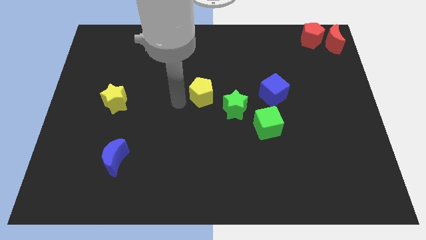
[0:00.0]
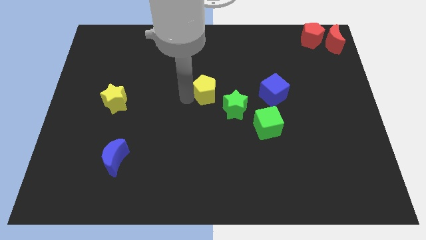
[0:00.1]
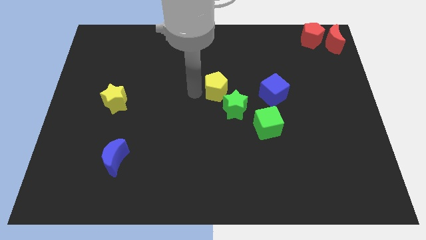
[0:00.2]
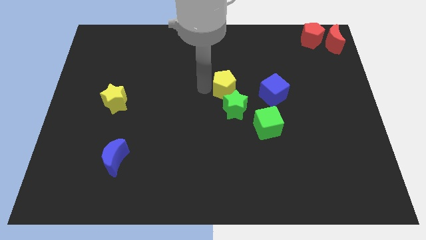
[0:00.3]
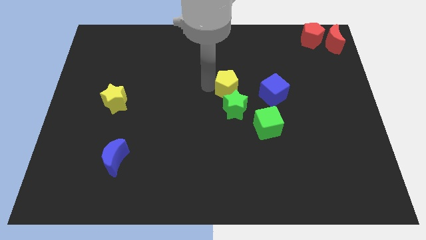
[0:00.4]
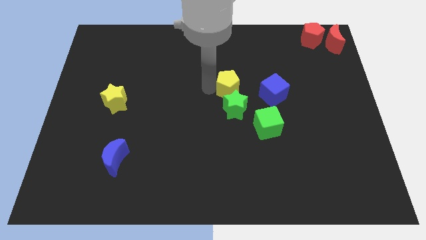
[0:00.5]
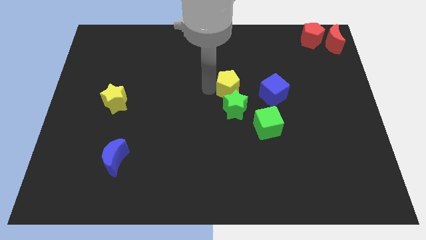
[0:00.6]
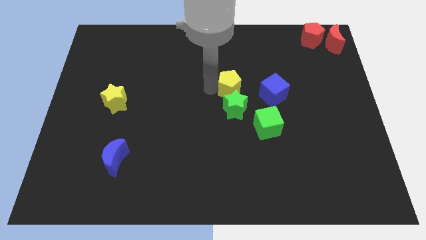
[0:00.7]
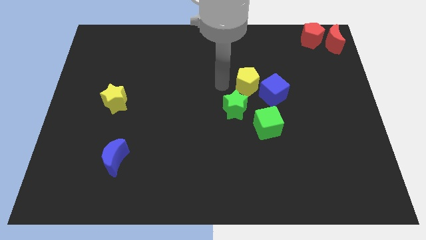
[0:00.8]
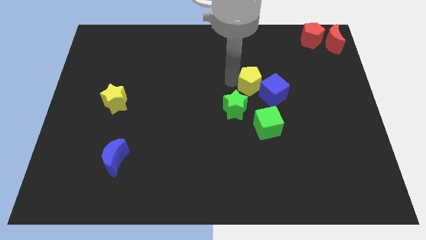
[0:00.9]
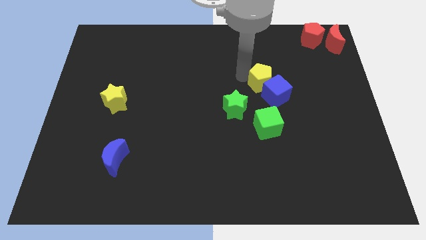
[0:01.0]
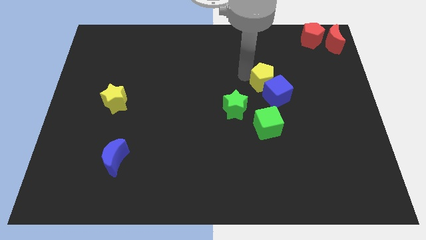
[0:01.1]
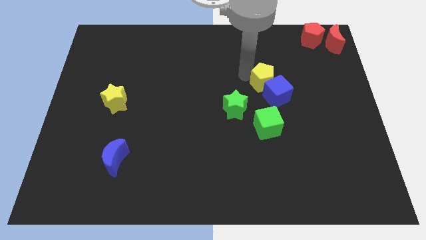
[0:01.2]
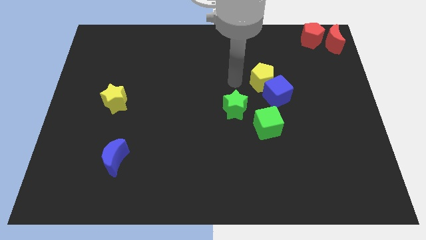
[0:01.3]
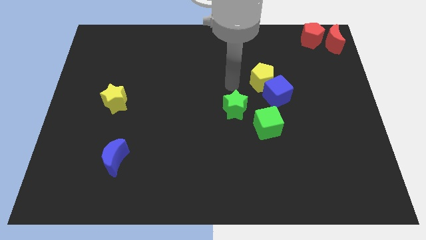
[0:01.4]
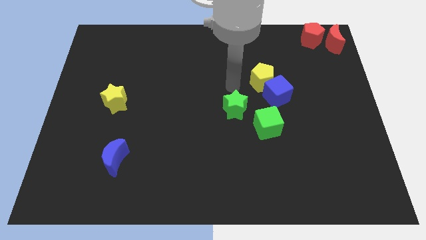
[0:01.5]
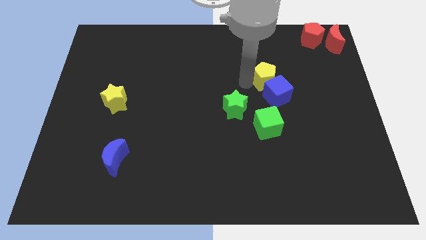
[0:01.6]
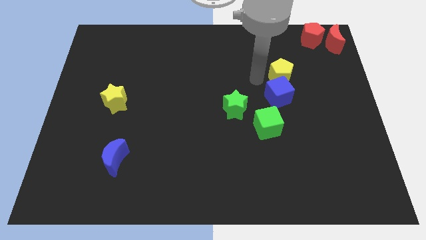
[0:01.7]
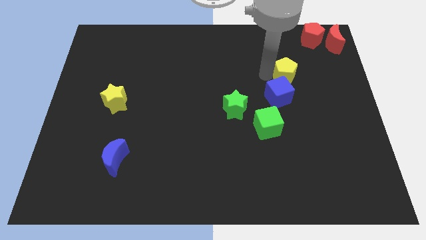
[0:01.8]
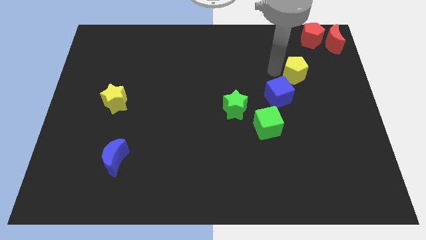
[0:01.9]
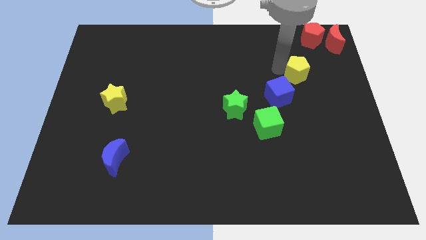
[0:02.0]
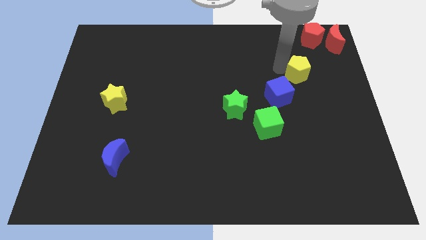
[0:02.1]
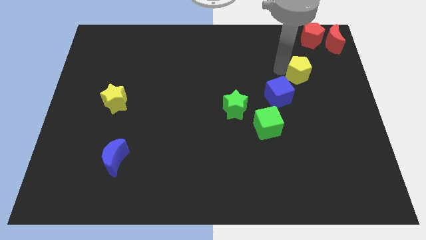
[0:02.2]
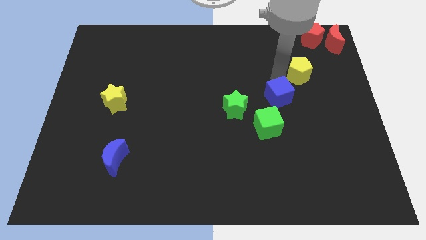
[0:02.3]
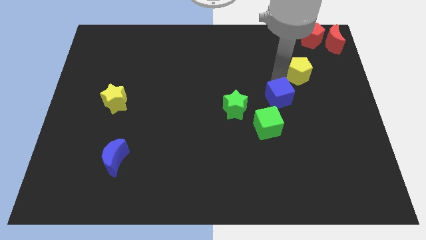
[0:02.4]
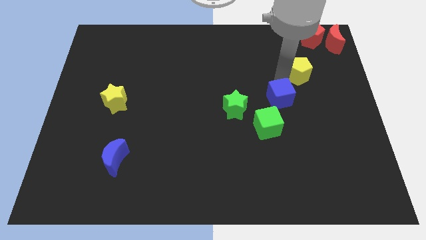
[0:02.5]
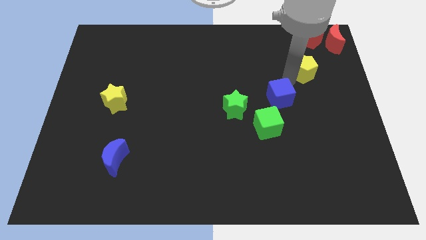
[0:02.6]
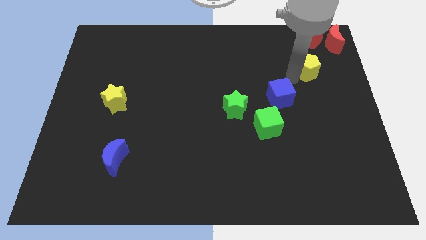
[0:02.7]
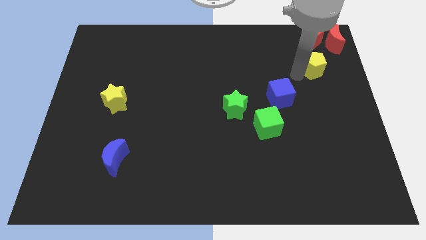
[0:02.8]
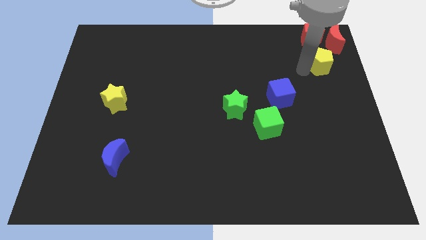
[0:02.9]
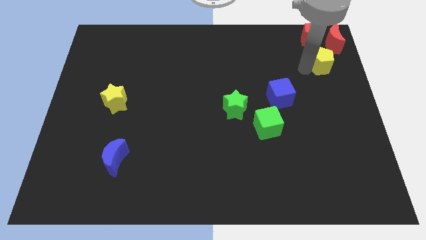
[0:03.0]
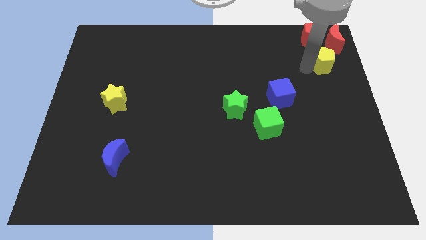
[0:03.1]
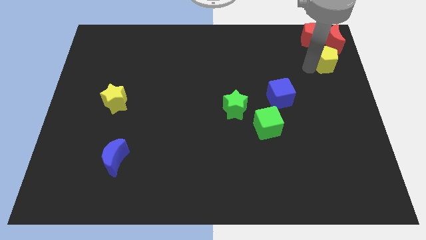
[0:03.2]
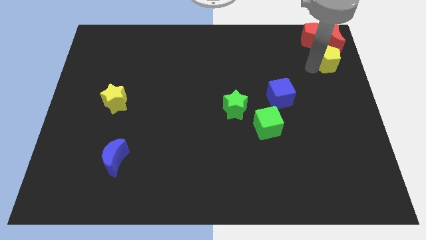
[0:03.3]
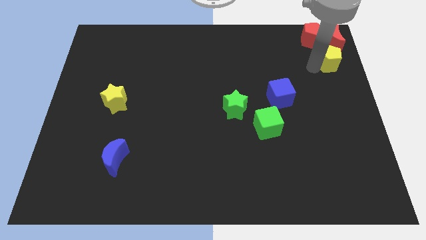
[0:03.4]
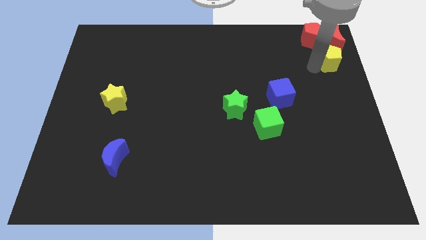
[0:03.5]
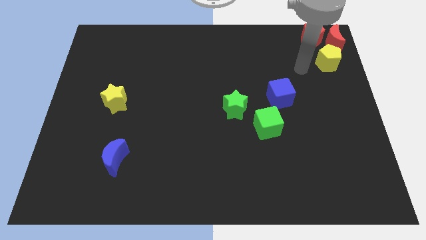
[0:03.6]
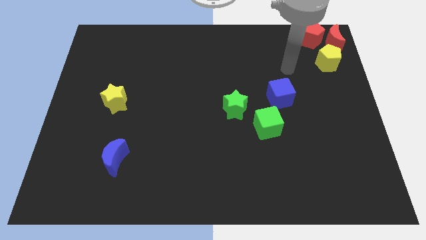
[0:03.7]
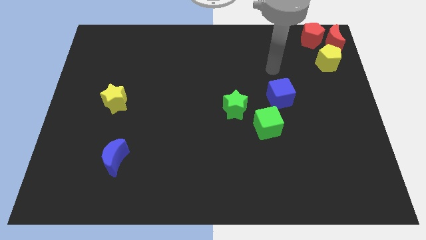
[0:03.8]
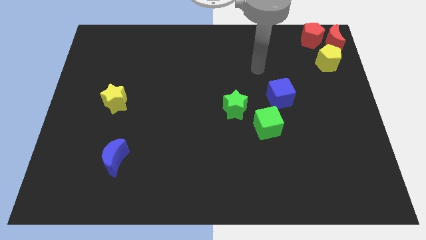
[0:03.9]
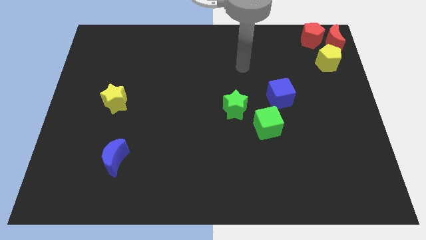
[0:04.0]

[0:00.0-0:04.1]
slide the yellow pentagon below the red moon

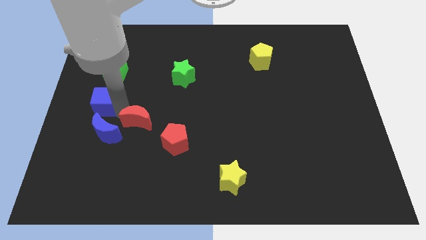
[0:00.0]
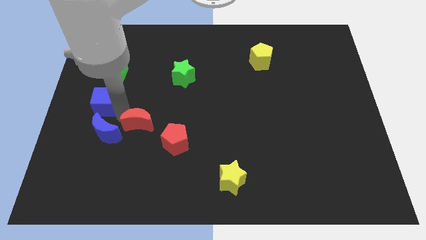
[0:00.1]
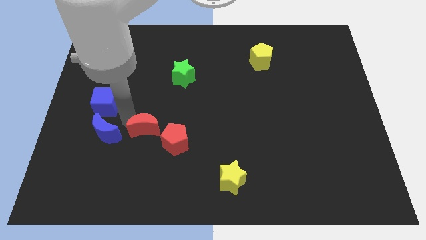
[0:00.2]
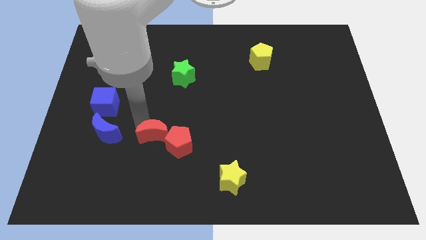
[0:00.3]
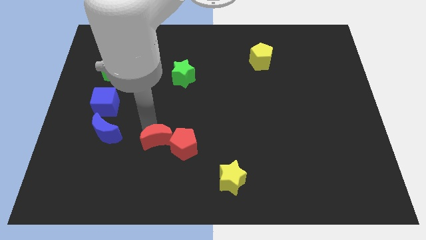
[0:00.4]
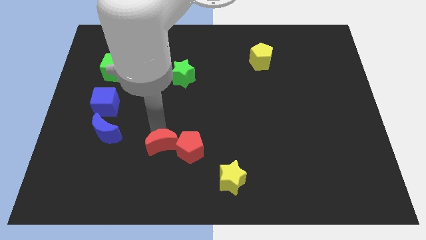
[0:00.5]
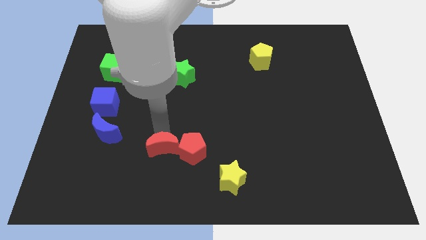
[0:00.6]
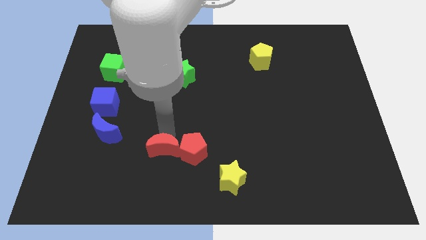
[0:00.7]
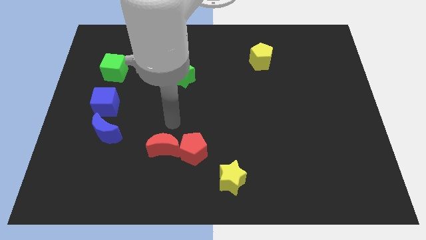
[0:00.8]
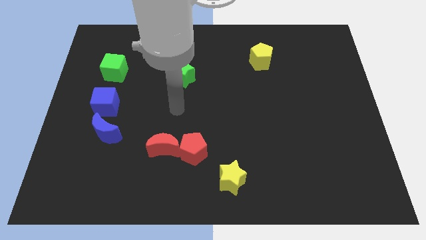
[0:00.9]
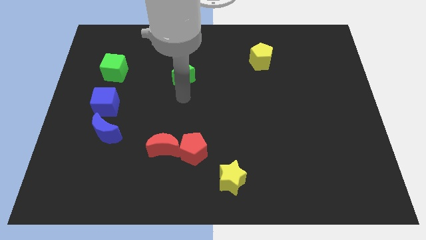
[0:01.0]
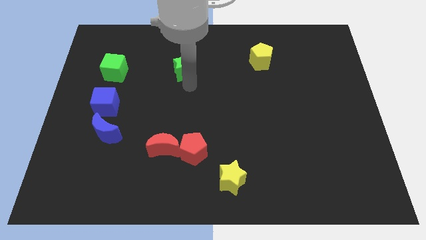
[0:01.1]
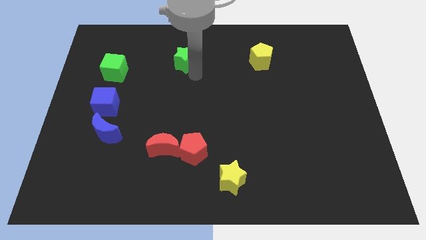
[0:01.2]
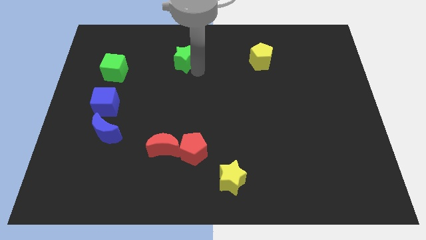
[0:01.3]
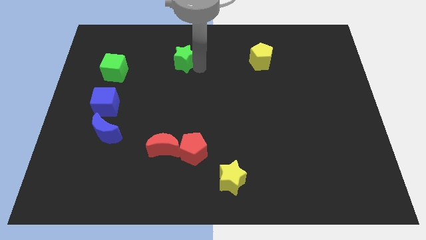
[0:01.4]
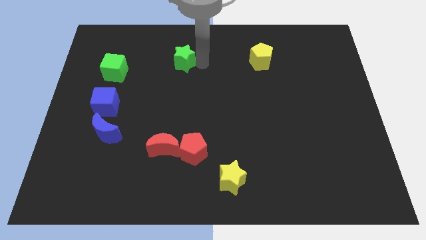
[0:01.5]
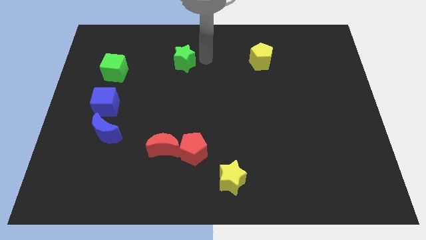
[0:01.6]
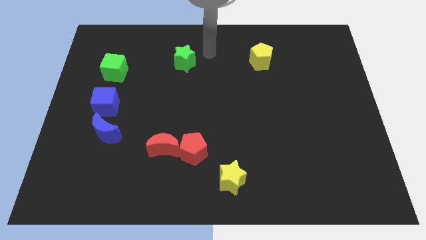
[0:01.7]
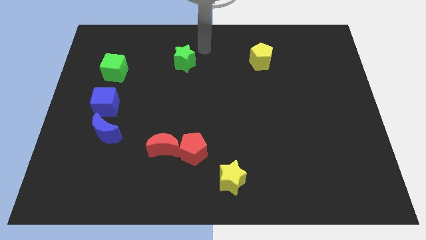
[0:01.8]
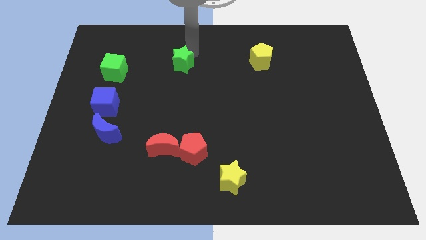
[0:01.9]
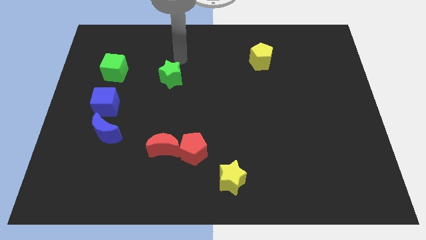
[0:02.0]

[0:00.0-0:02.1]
move the red moon diagonally to the blue crescent

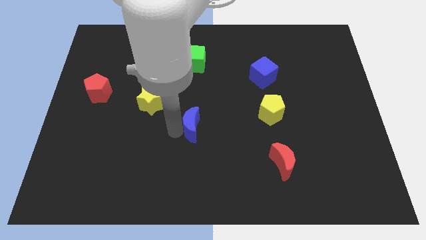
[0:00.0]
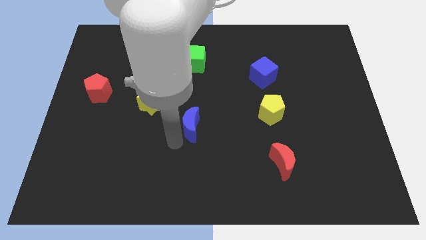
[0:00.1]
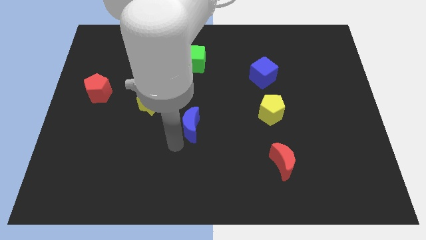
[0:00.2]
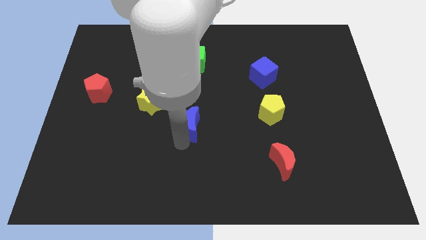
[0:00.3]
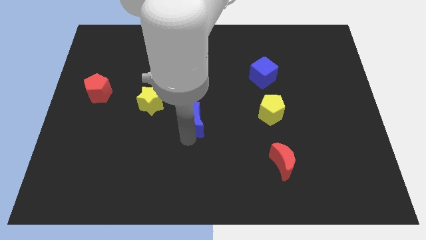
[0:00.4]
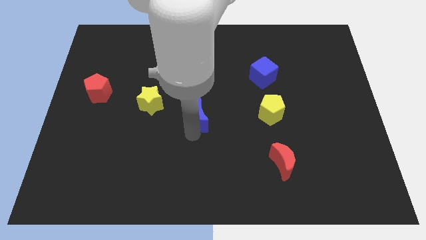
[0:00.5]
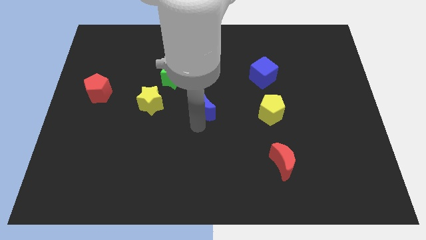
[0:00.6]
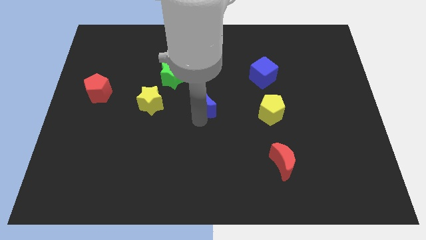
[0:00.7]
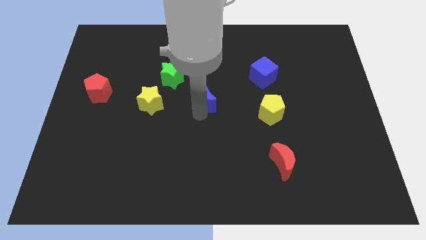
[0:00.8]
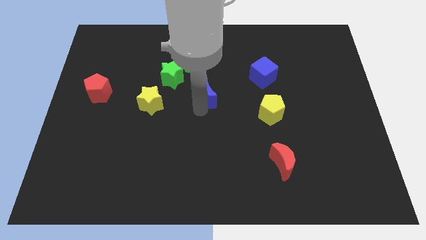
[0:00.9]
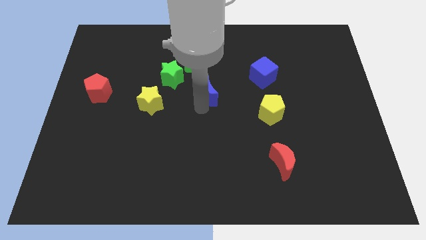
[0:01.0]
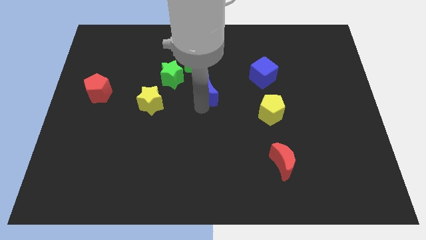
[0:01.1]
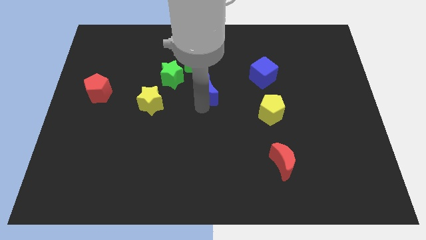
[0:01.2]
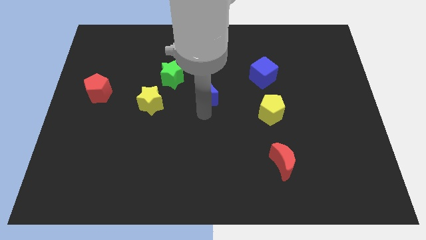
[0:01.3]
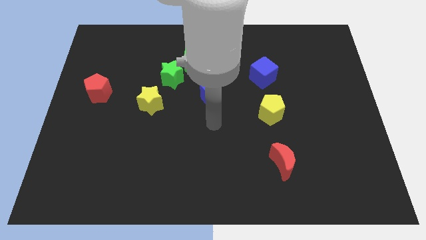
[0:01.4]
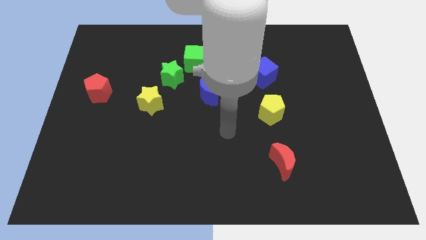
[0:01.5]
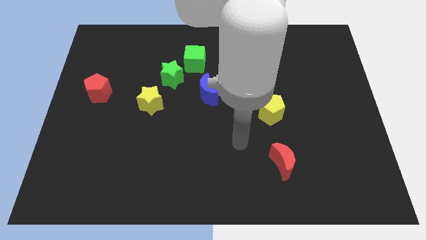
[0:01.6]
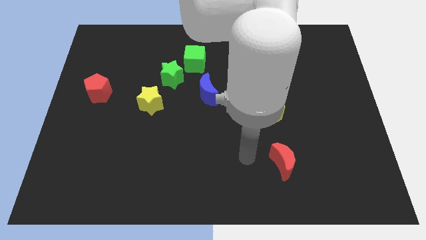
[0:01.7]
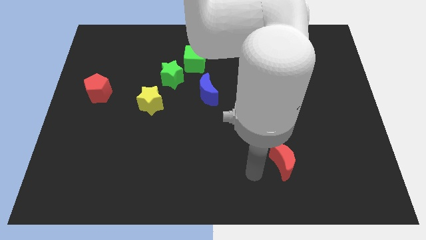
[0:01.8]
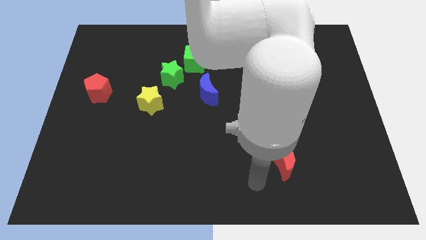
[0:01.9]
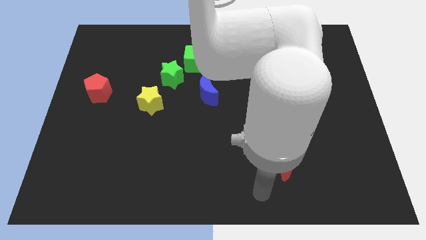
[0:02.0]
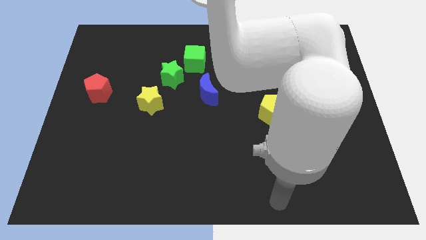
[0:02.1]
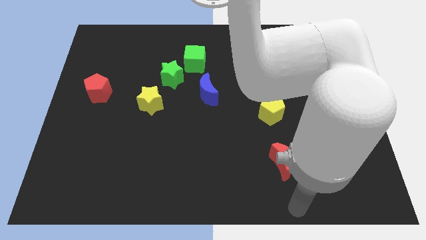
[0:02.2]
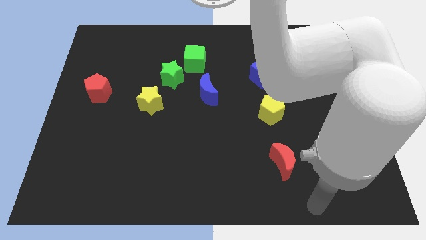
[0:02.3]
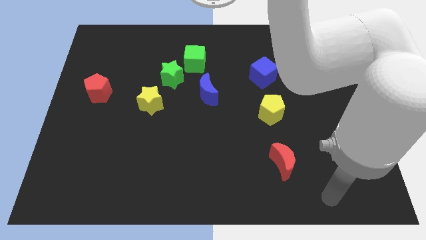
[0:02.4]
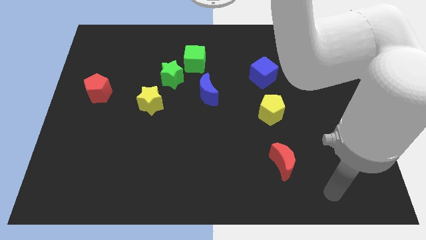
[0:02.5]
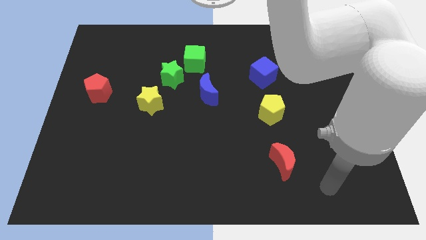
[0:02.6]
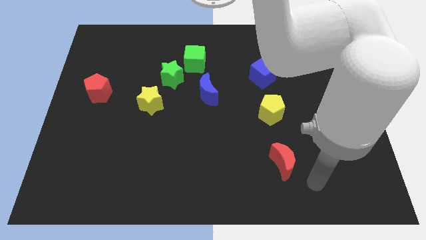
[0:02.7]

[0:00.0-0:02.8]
put the blue crescent parallel to the red pentagon
